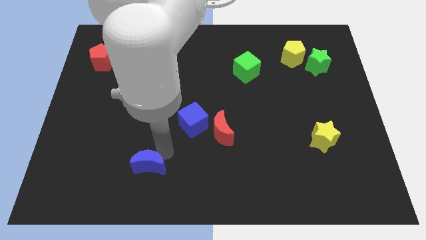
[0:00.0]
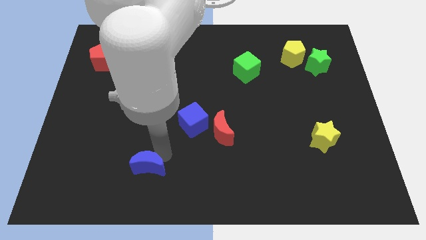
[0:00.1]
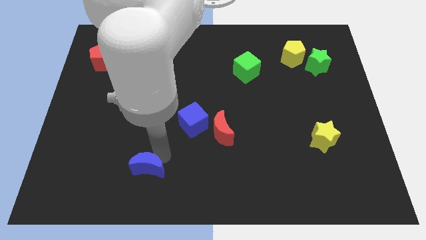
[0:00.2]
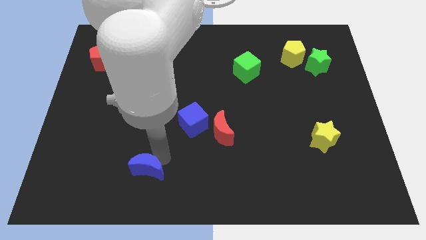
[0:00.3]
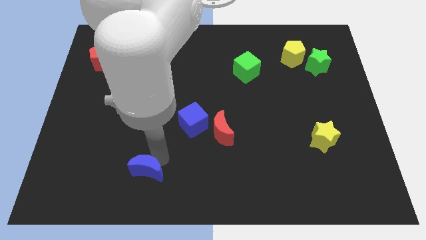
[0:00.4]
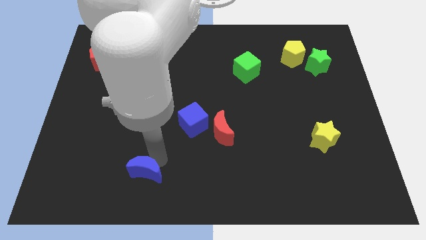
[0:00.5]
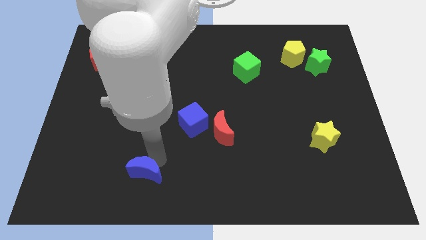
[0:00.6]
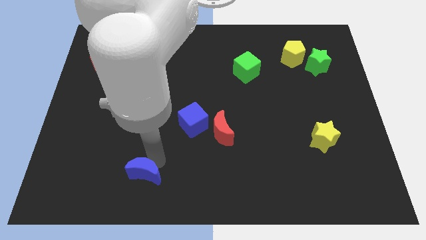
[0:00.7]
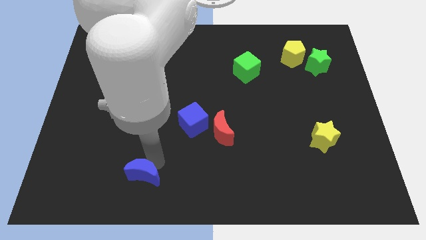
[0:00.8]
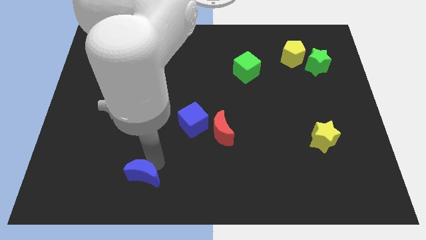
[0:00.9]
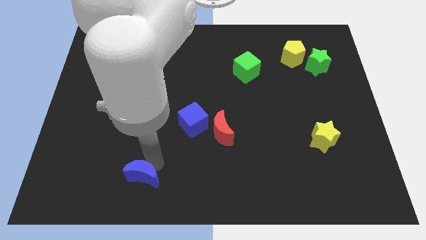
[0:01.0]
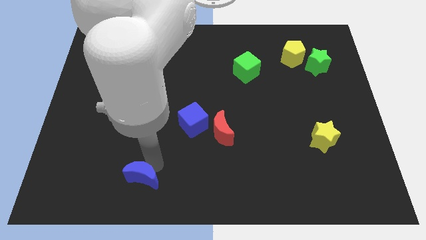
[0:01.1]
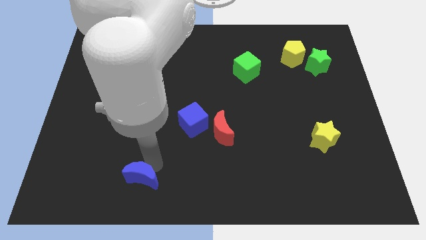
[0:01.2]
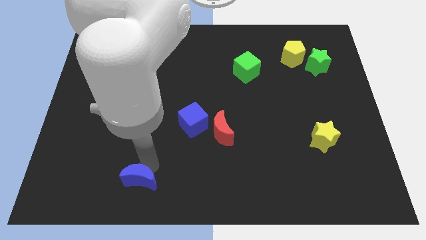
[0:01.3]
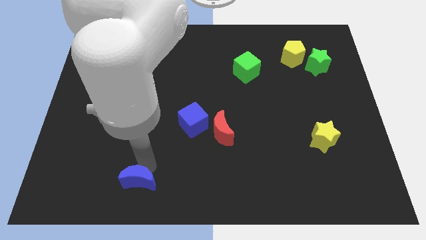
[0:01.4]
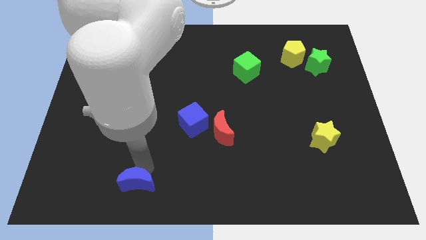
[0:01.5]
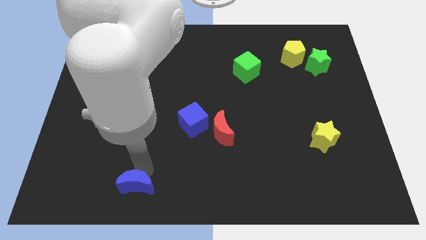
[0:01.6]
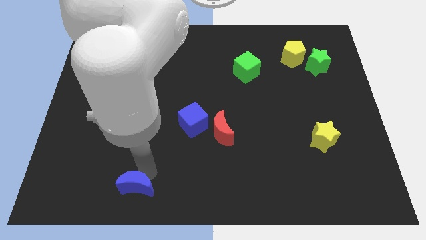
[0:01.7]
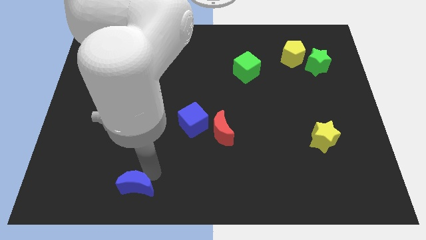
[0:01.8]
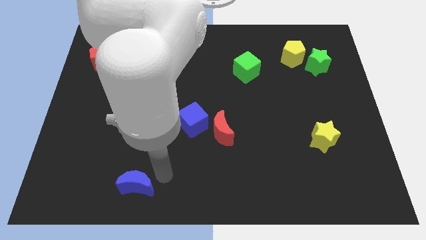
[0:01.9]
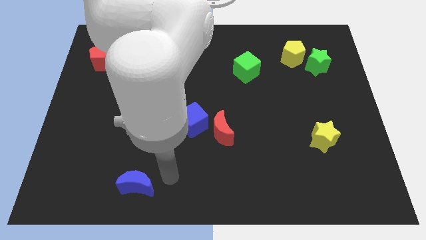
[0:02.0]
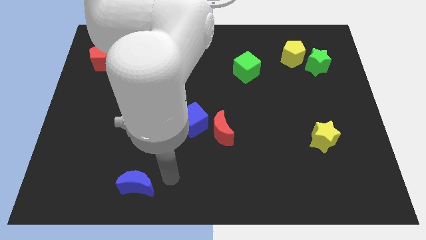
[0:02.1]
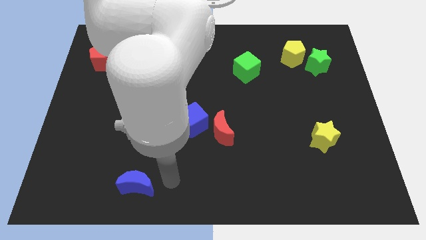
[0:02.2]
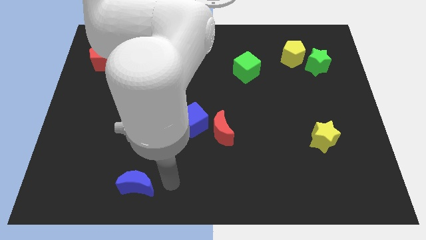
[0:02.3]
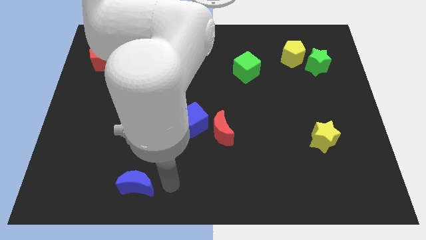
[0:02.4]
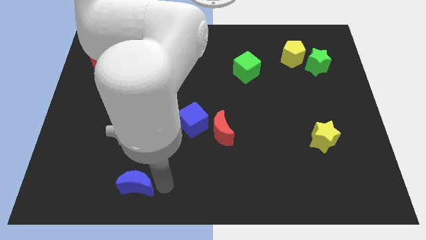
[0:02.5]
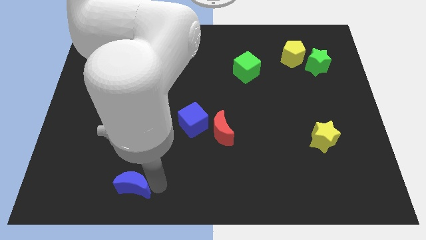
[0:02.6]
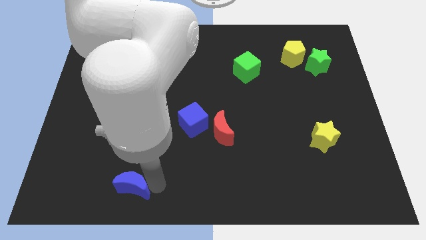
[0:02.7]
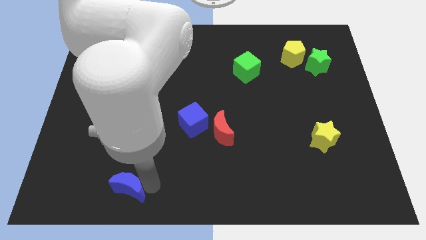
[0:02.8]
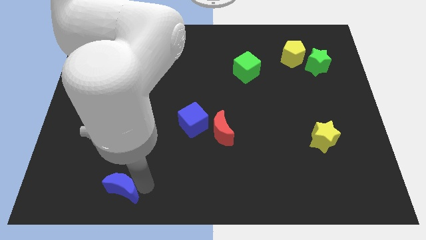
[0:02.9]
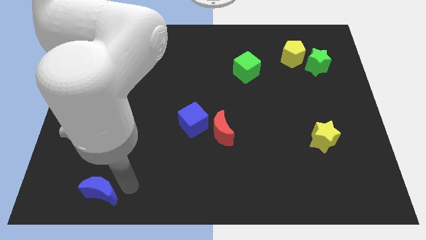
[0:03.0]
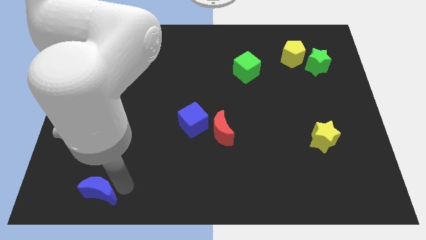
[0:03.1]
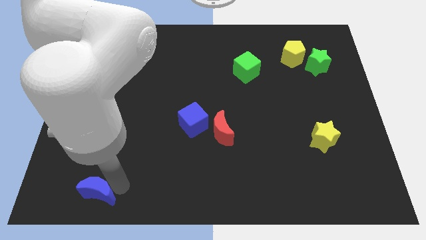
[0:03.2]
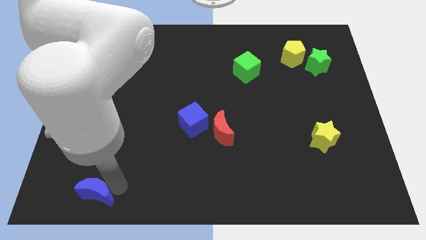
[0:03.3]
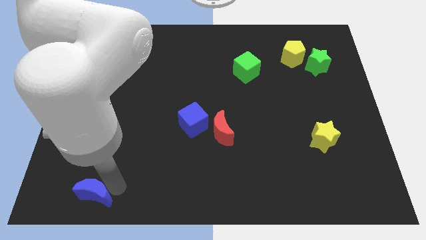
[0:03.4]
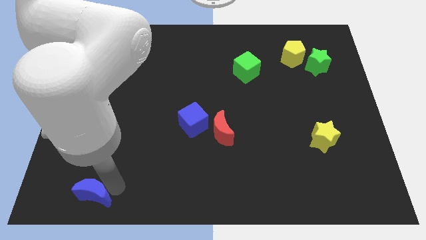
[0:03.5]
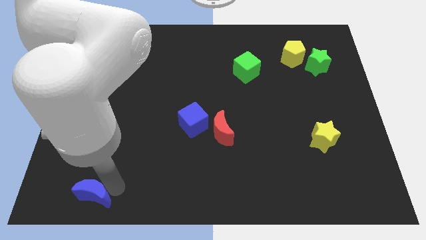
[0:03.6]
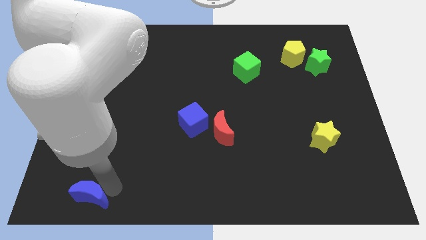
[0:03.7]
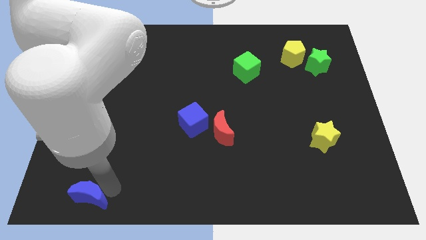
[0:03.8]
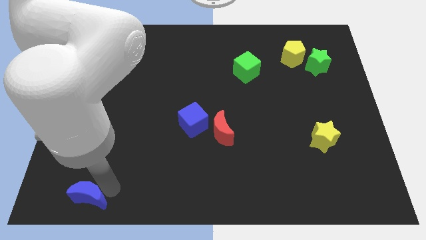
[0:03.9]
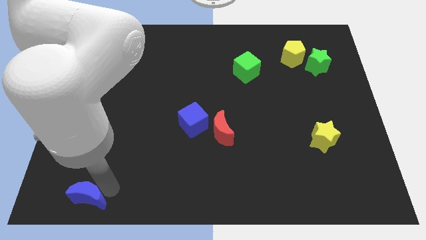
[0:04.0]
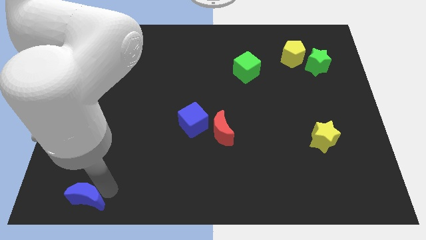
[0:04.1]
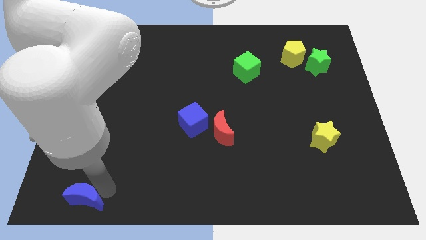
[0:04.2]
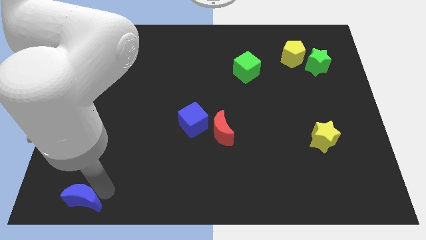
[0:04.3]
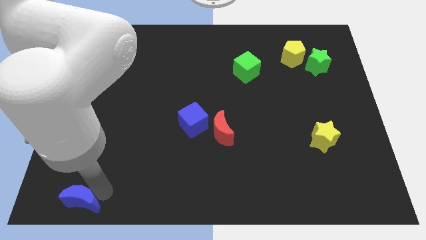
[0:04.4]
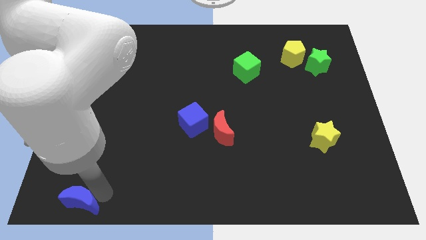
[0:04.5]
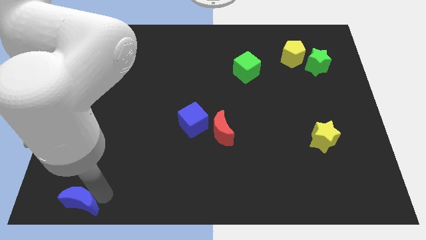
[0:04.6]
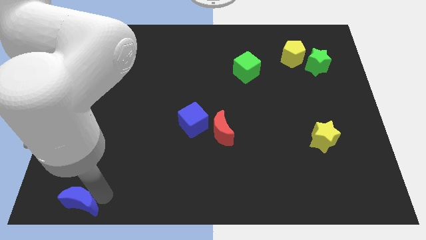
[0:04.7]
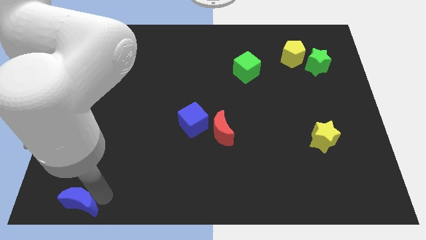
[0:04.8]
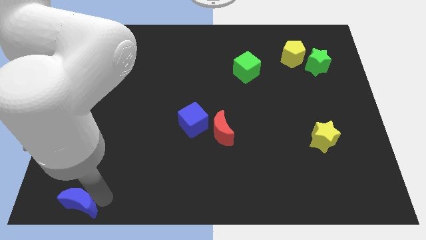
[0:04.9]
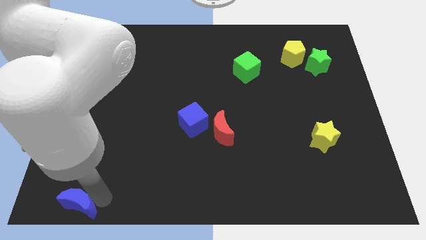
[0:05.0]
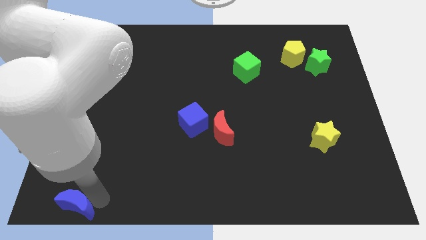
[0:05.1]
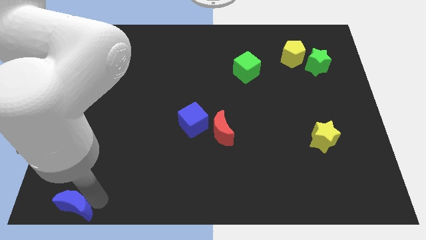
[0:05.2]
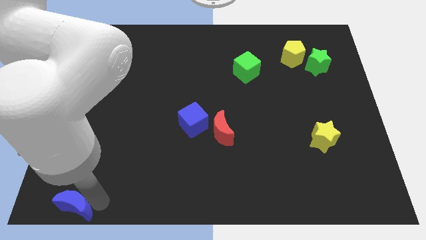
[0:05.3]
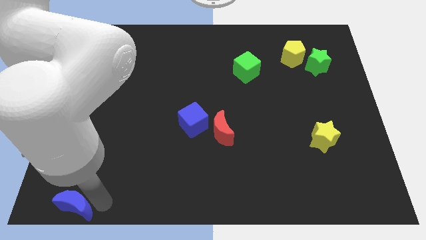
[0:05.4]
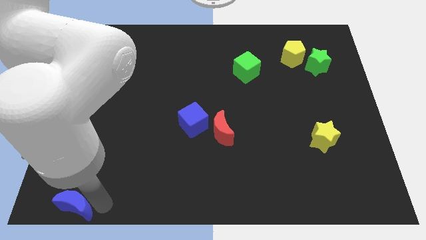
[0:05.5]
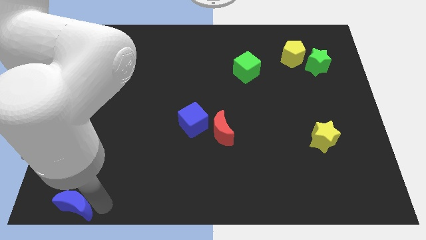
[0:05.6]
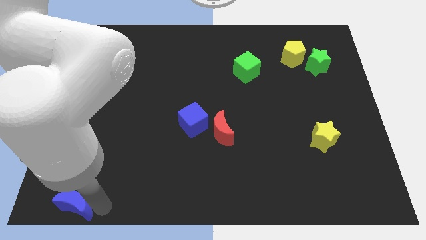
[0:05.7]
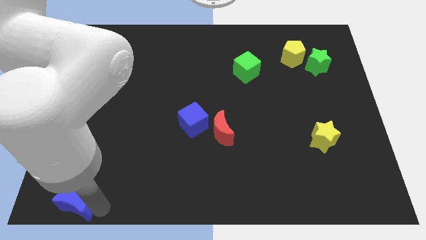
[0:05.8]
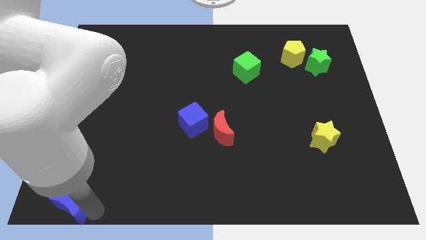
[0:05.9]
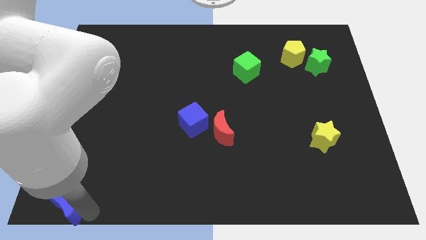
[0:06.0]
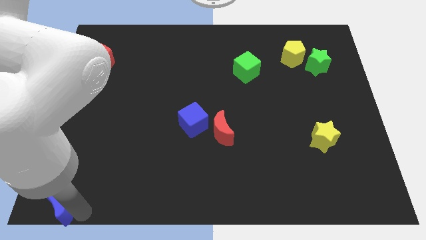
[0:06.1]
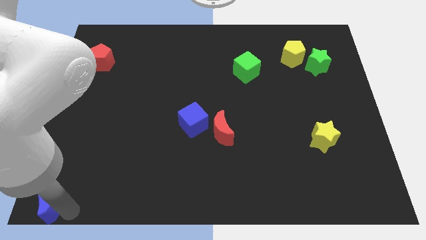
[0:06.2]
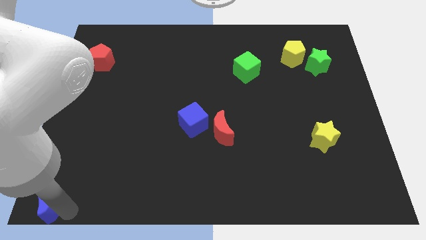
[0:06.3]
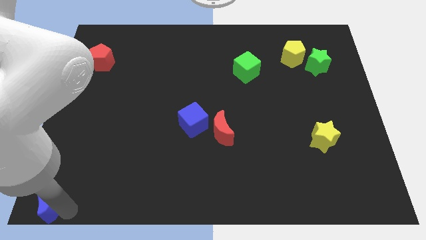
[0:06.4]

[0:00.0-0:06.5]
push the blue crescent towards the left corner

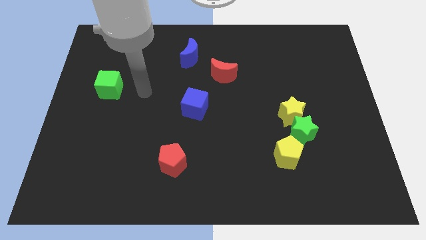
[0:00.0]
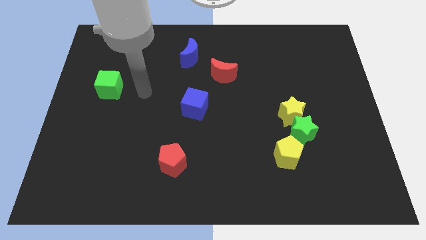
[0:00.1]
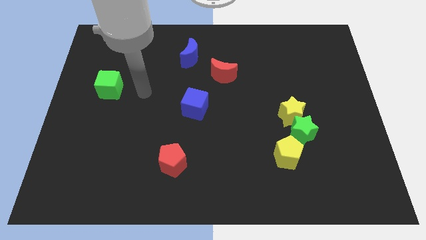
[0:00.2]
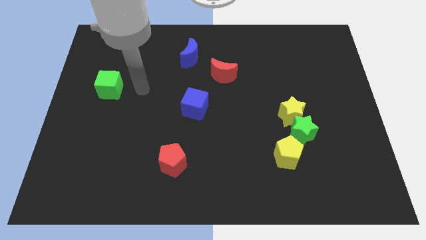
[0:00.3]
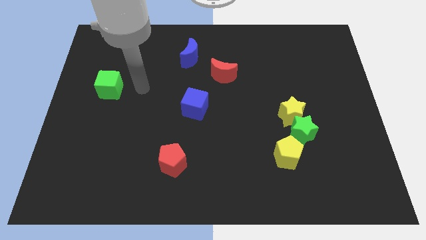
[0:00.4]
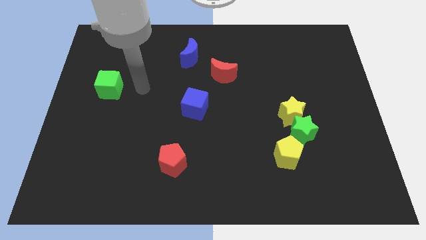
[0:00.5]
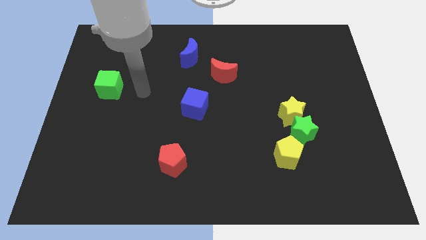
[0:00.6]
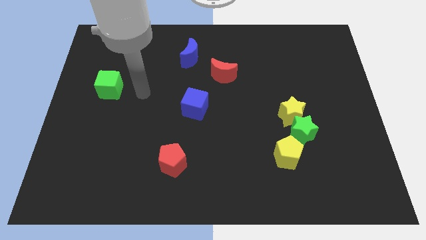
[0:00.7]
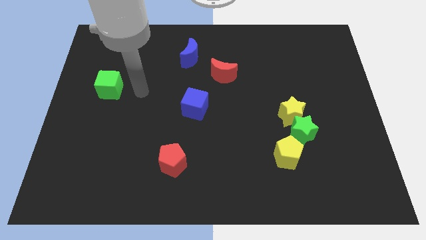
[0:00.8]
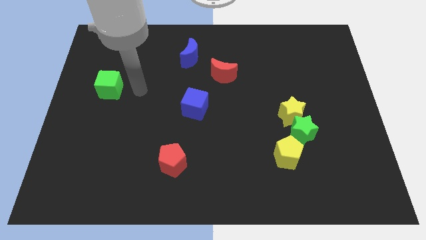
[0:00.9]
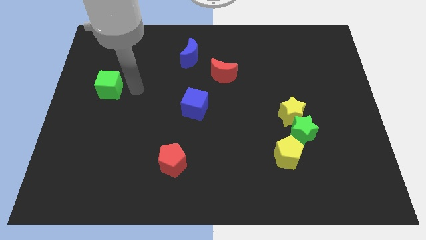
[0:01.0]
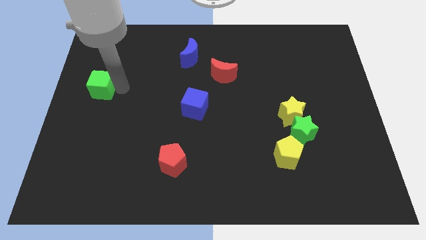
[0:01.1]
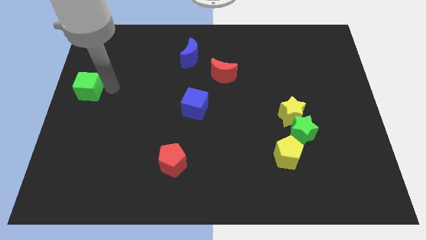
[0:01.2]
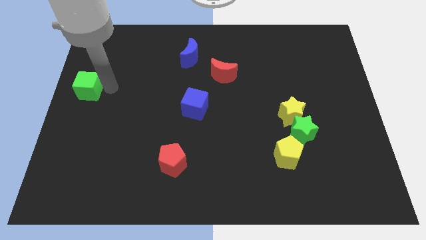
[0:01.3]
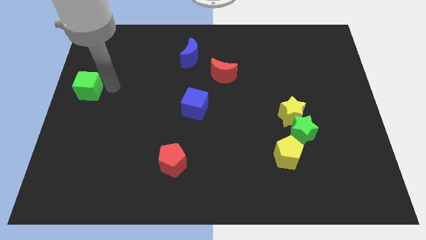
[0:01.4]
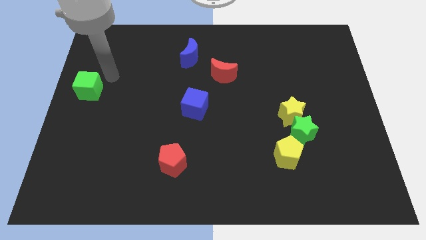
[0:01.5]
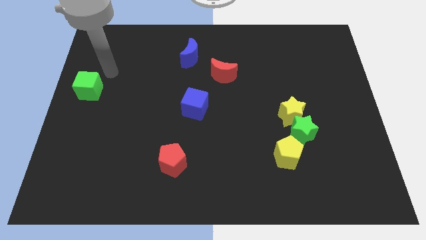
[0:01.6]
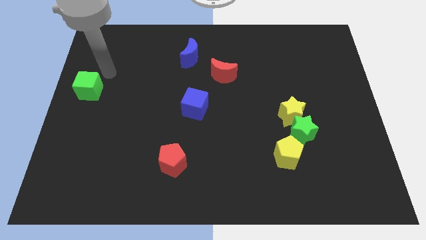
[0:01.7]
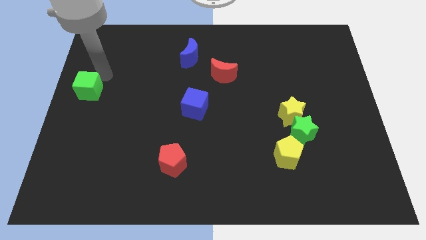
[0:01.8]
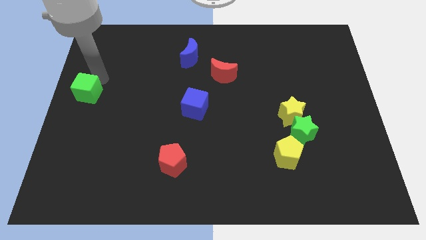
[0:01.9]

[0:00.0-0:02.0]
push the green cube to the left side of the board

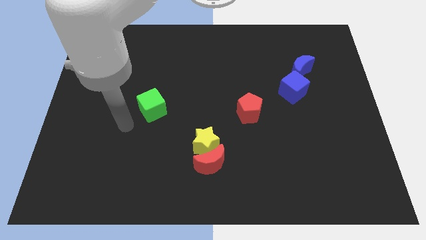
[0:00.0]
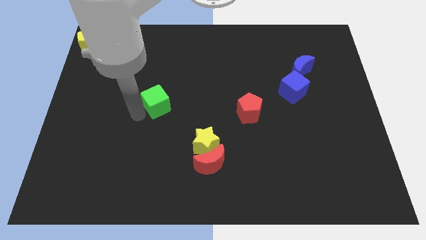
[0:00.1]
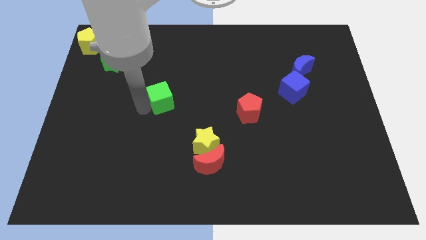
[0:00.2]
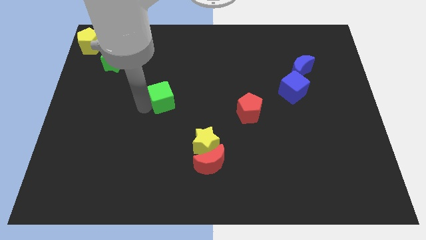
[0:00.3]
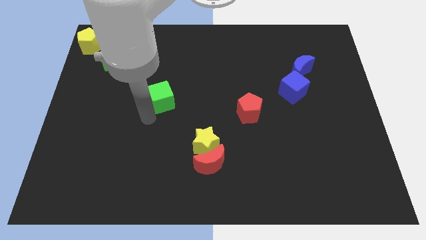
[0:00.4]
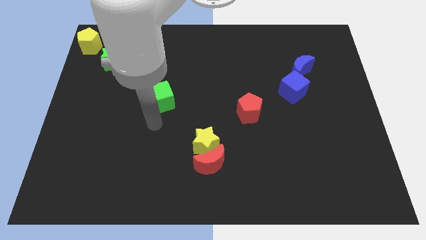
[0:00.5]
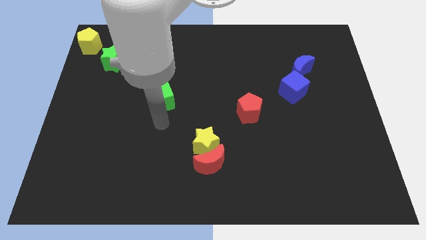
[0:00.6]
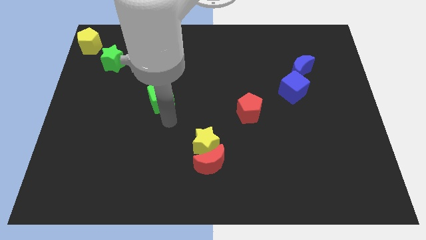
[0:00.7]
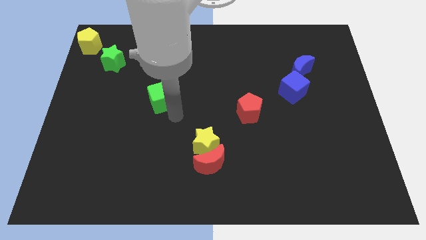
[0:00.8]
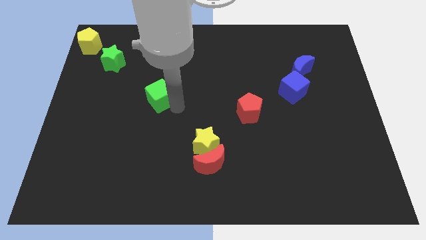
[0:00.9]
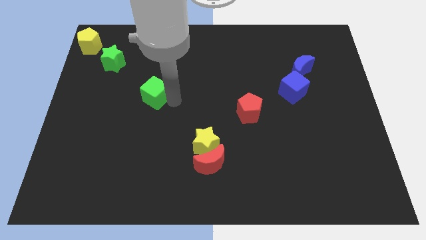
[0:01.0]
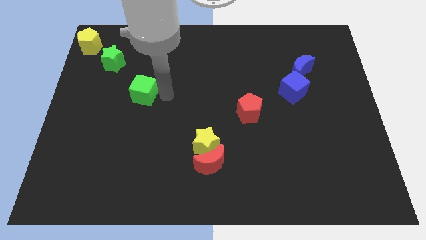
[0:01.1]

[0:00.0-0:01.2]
place the green cube diagonally to green star
